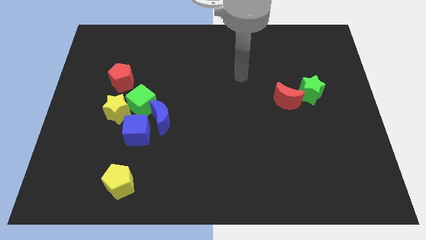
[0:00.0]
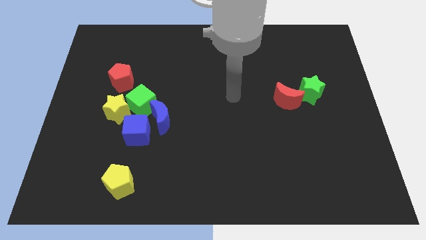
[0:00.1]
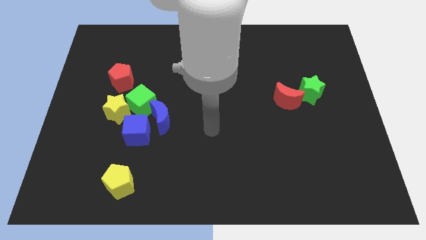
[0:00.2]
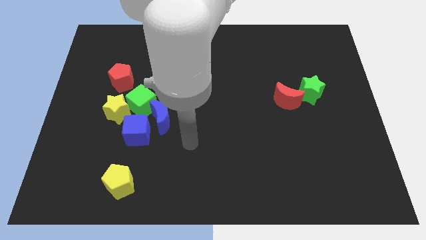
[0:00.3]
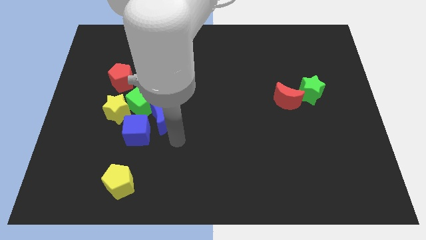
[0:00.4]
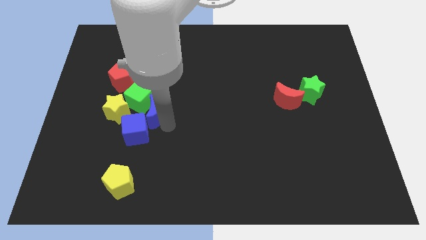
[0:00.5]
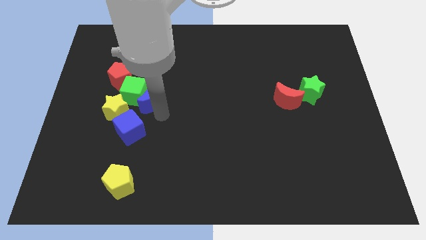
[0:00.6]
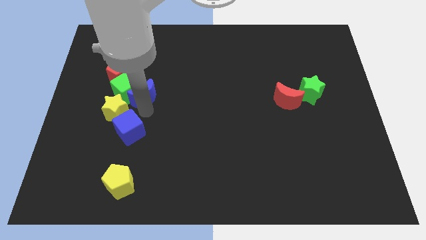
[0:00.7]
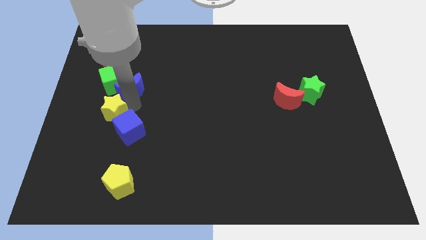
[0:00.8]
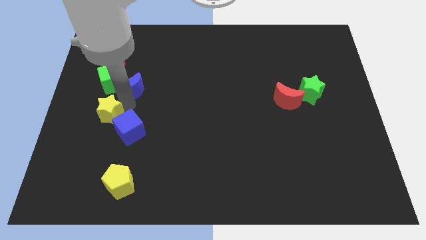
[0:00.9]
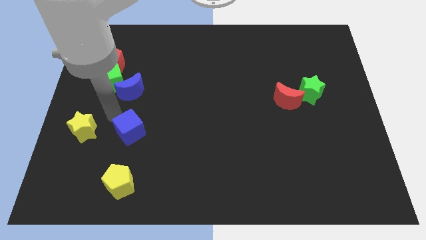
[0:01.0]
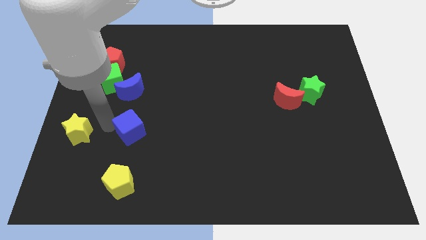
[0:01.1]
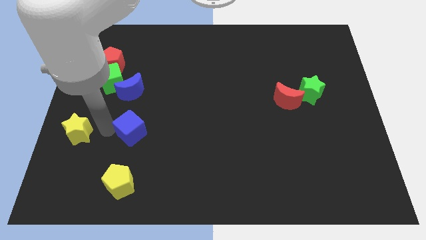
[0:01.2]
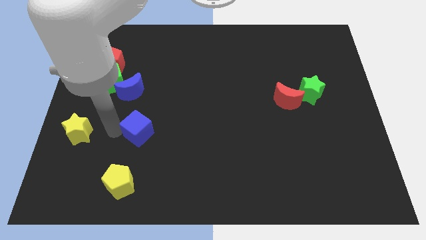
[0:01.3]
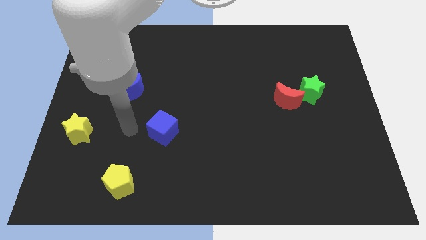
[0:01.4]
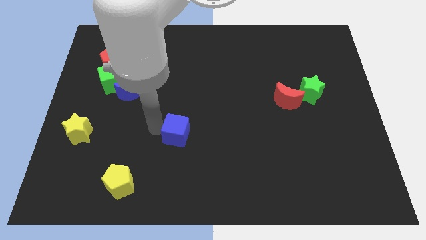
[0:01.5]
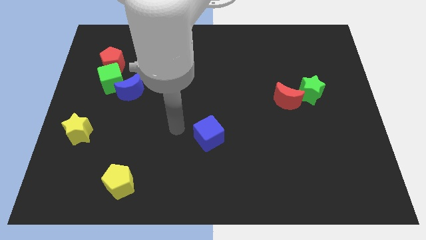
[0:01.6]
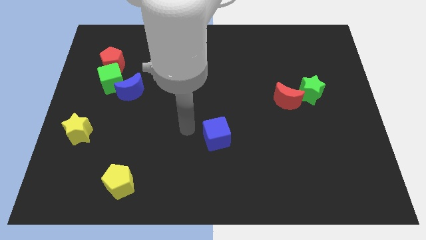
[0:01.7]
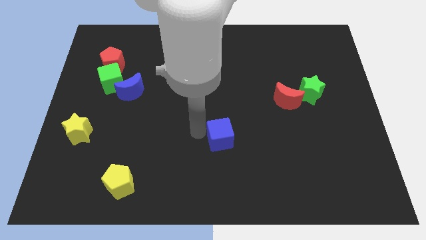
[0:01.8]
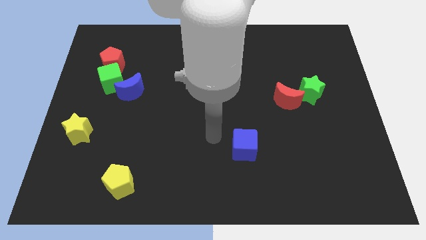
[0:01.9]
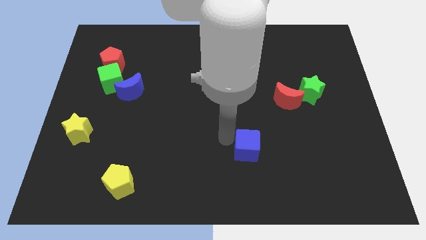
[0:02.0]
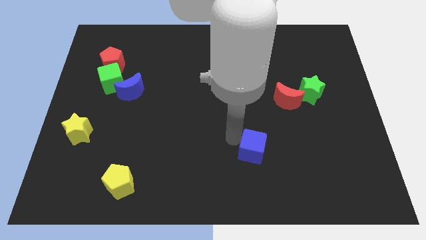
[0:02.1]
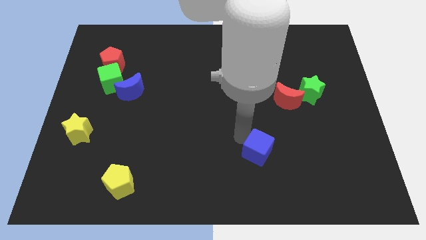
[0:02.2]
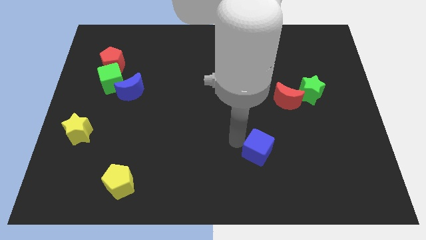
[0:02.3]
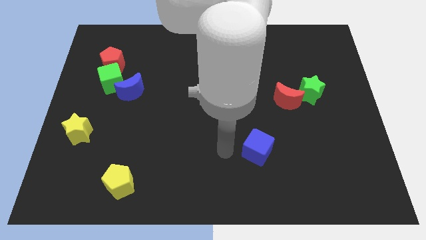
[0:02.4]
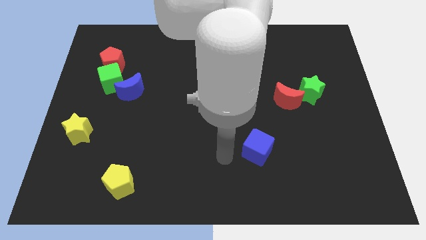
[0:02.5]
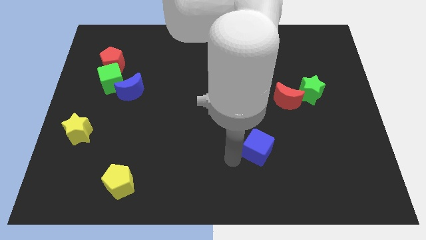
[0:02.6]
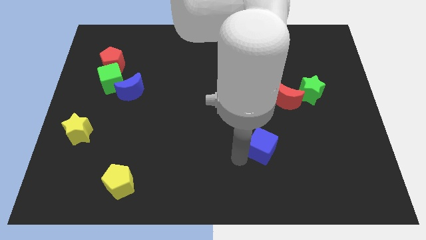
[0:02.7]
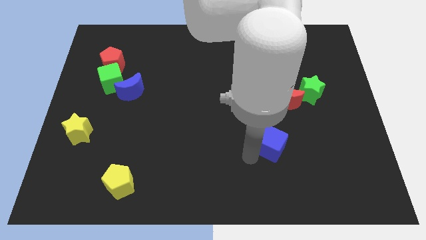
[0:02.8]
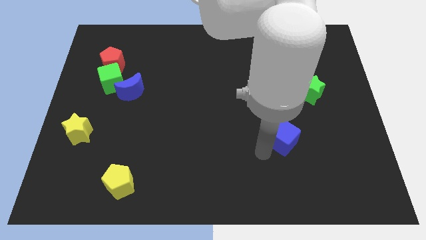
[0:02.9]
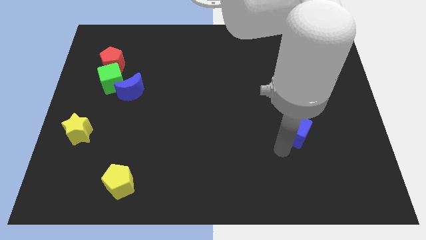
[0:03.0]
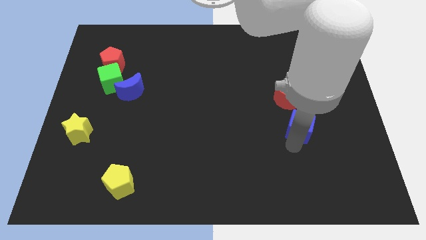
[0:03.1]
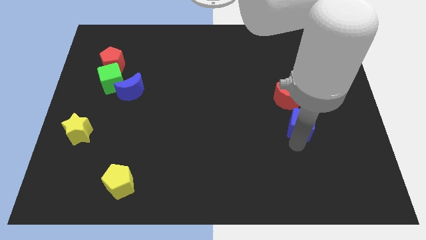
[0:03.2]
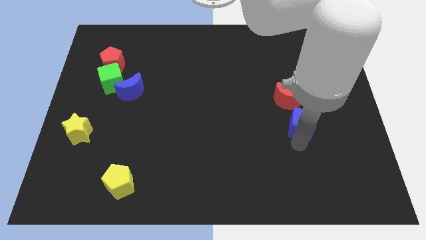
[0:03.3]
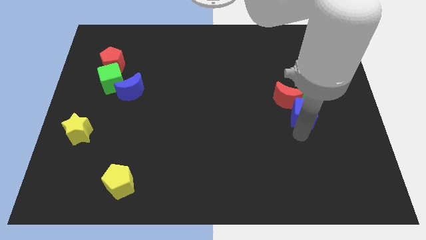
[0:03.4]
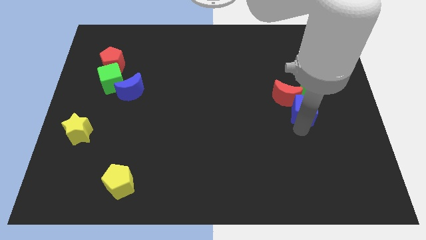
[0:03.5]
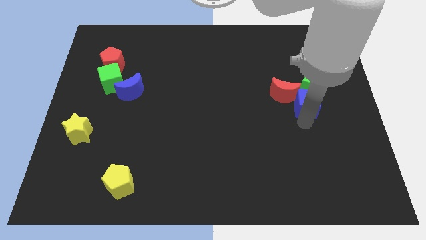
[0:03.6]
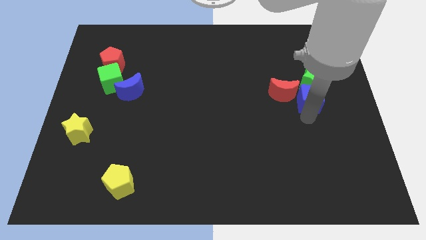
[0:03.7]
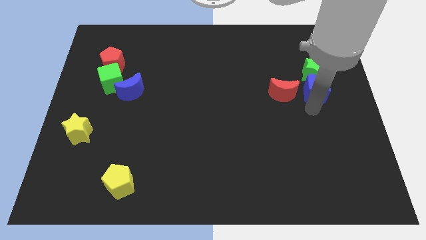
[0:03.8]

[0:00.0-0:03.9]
put the blue cube to the green star

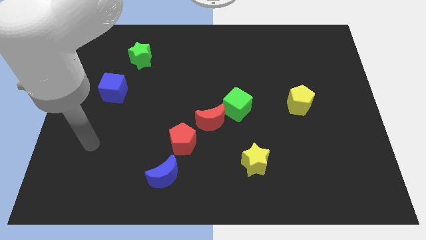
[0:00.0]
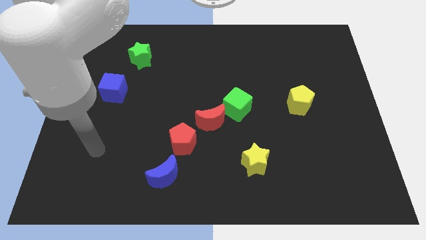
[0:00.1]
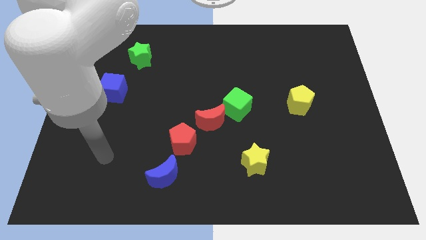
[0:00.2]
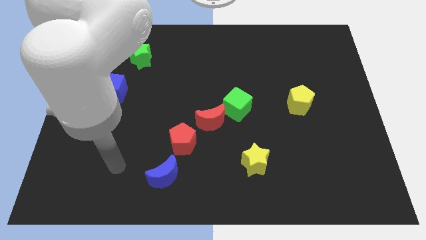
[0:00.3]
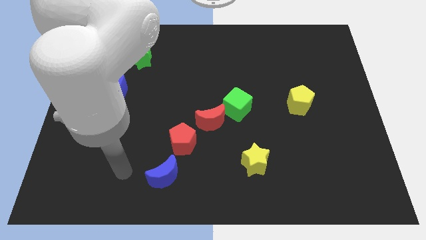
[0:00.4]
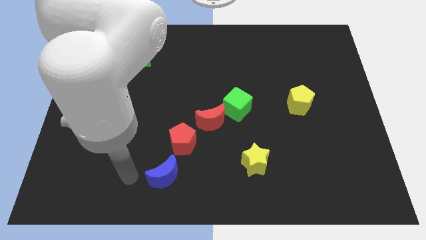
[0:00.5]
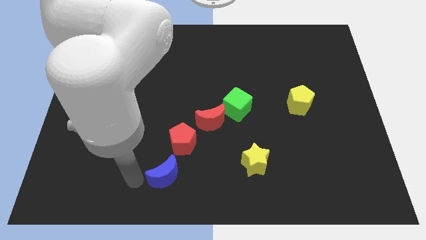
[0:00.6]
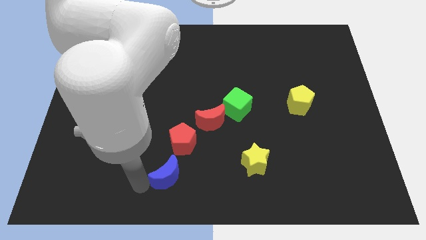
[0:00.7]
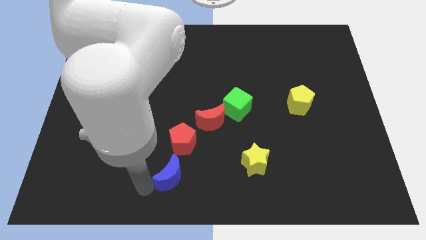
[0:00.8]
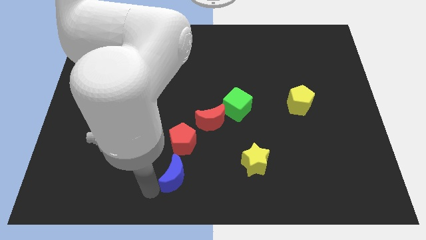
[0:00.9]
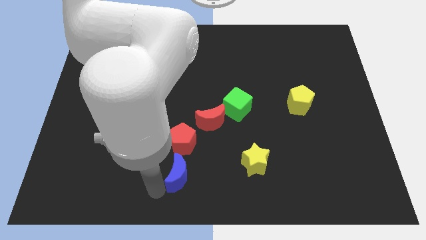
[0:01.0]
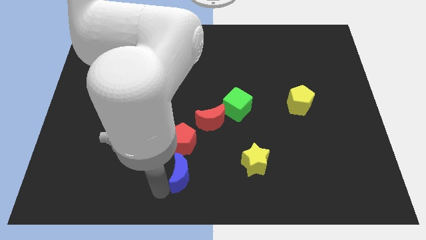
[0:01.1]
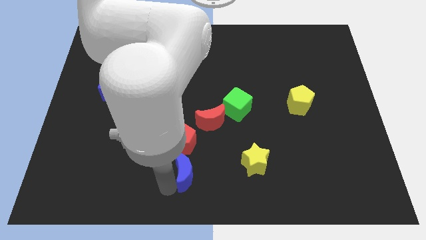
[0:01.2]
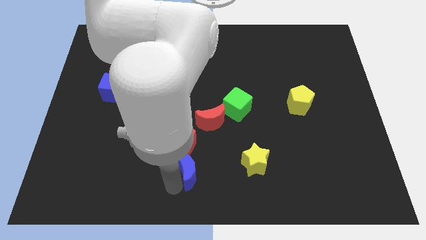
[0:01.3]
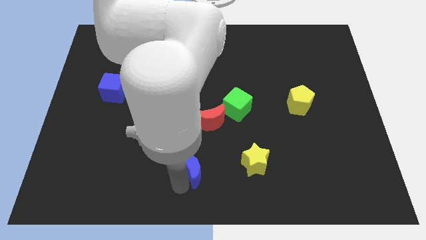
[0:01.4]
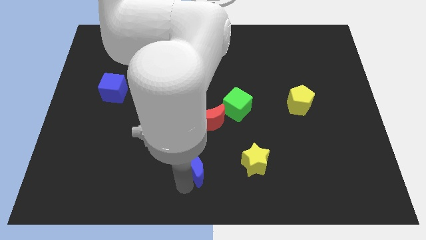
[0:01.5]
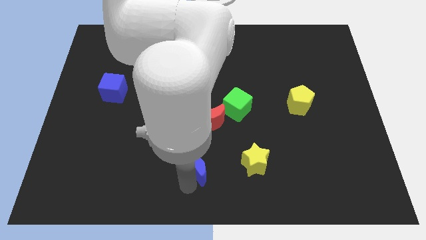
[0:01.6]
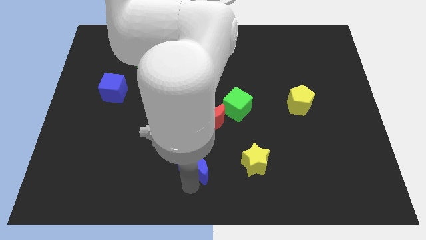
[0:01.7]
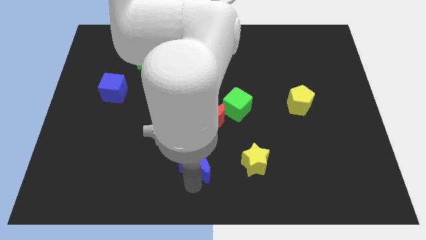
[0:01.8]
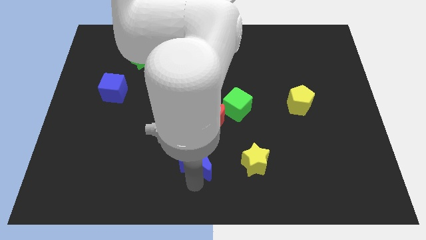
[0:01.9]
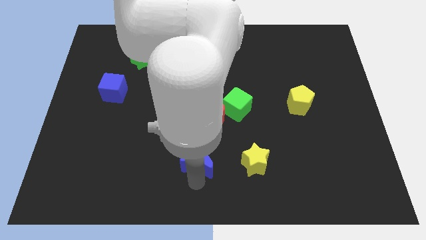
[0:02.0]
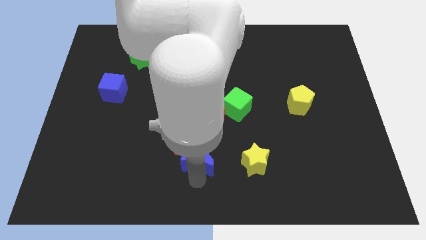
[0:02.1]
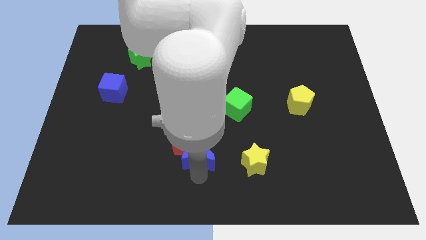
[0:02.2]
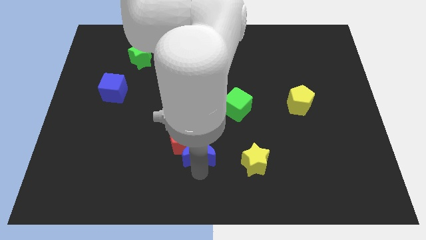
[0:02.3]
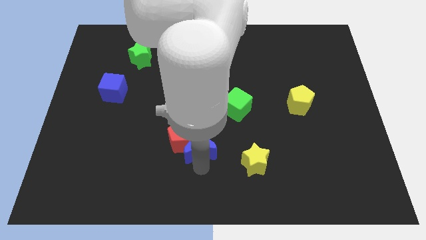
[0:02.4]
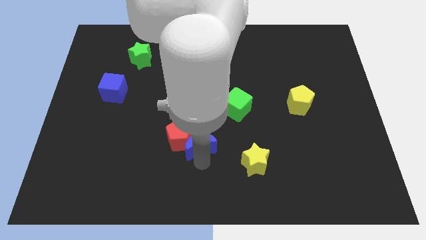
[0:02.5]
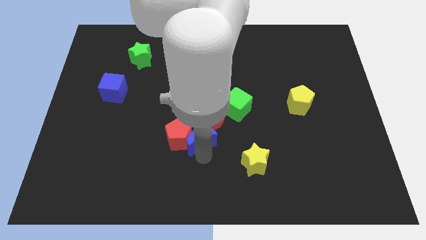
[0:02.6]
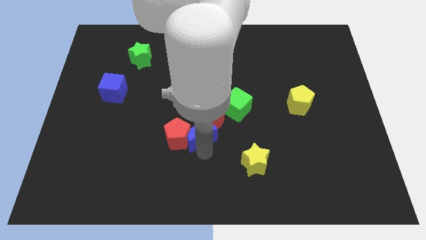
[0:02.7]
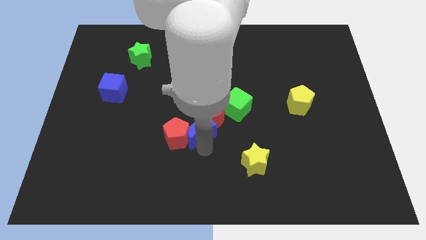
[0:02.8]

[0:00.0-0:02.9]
put the blue moon to the red moon

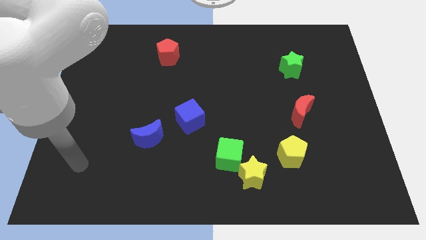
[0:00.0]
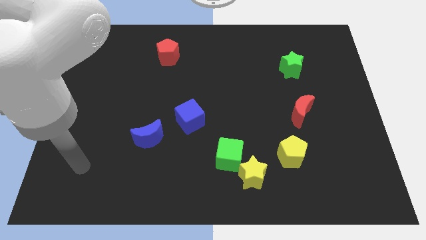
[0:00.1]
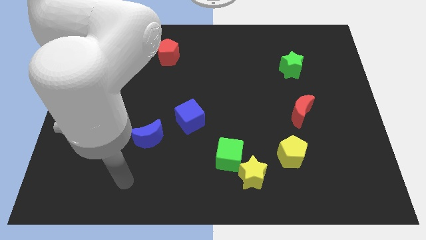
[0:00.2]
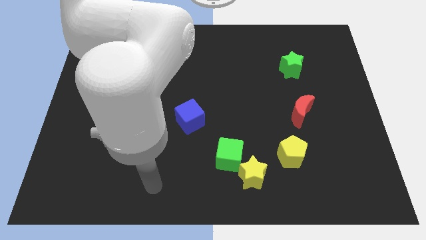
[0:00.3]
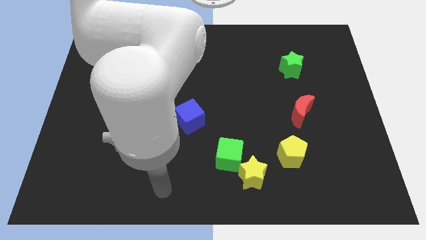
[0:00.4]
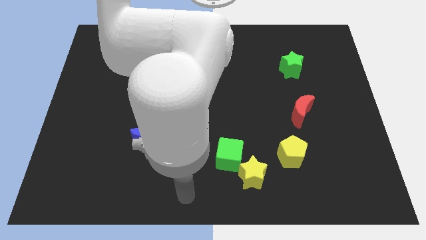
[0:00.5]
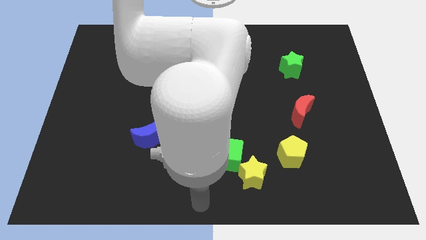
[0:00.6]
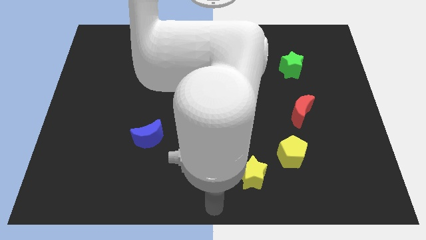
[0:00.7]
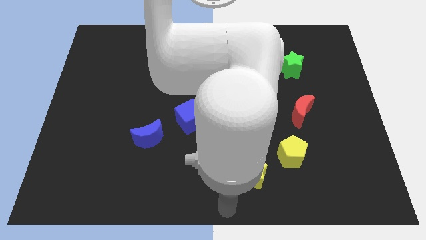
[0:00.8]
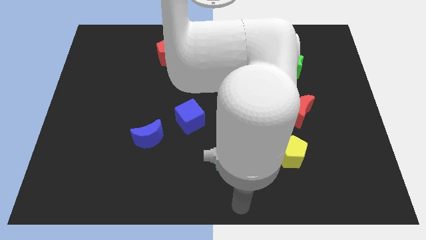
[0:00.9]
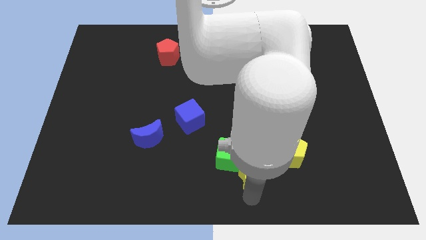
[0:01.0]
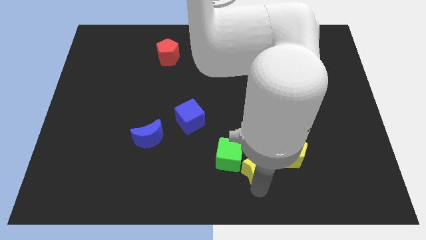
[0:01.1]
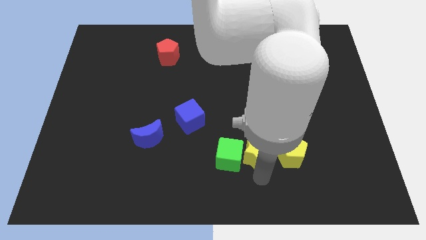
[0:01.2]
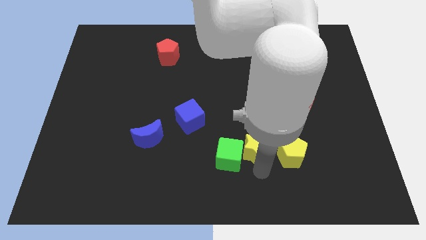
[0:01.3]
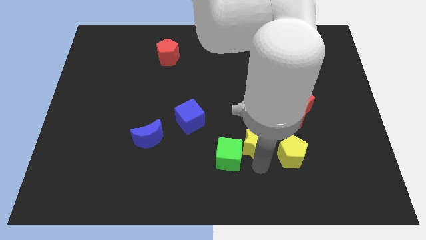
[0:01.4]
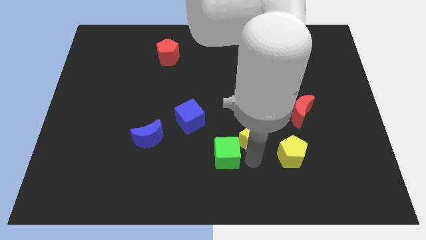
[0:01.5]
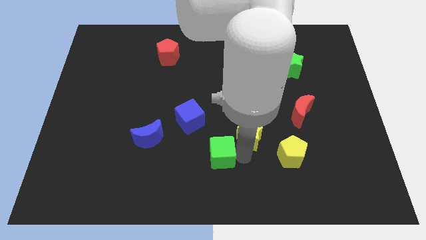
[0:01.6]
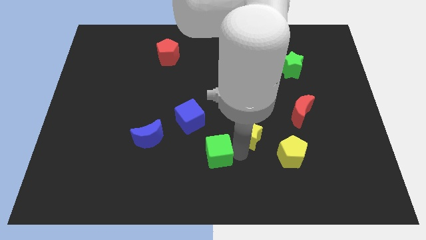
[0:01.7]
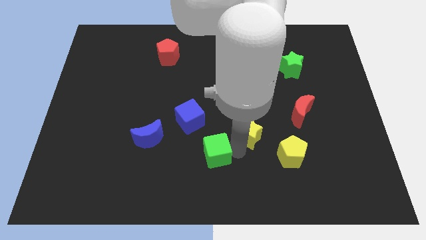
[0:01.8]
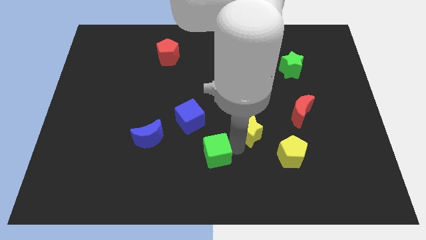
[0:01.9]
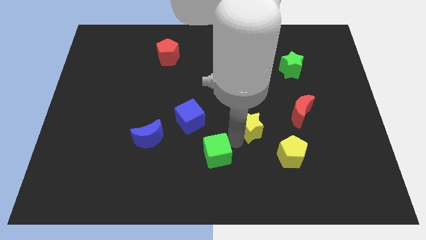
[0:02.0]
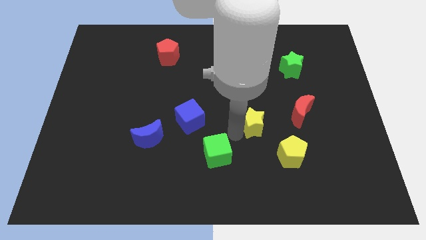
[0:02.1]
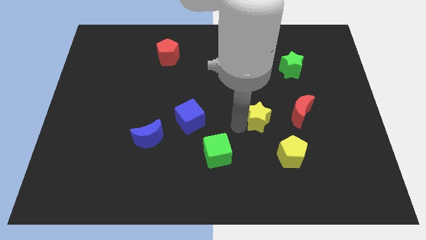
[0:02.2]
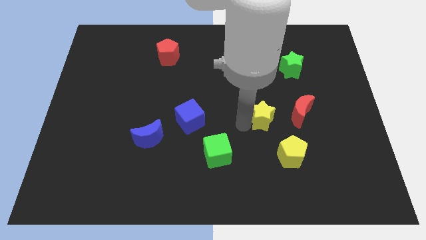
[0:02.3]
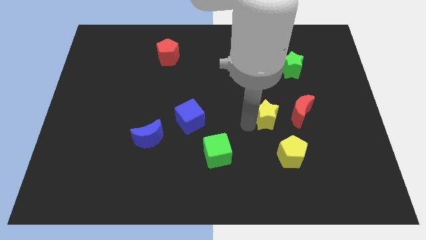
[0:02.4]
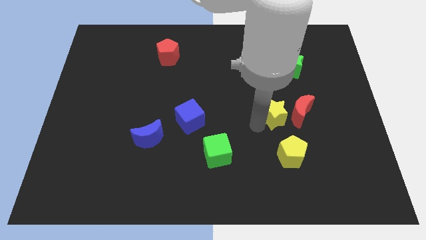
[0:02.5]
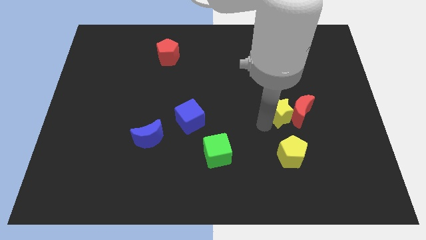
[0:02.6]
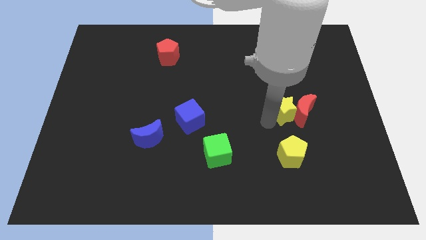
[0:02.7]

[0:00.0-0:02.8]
push the yellow star towards the red moon
